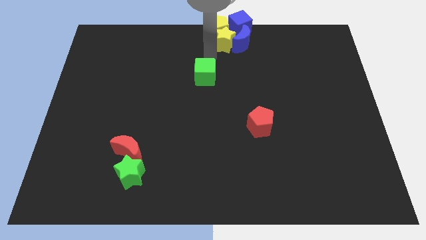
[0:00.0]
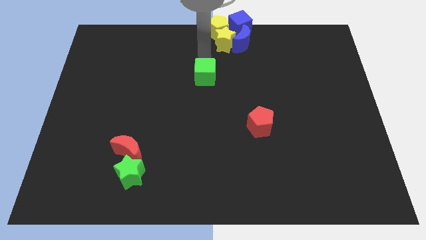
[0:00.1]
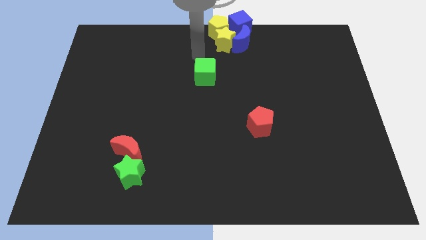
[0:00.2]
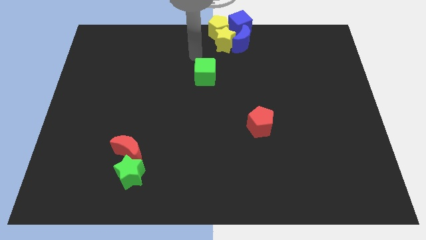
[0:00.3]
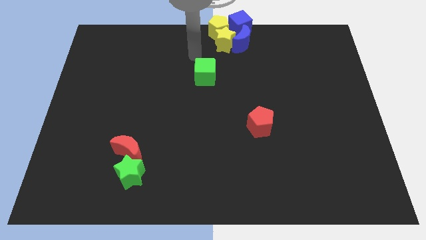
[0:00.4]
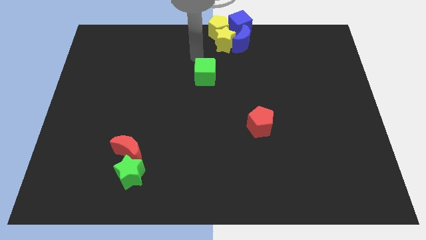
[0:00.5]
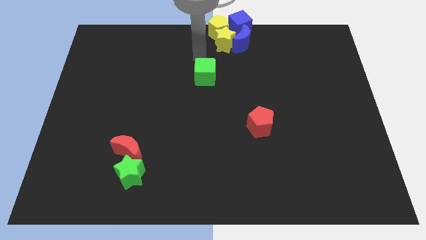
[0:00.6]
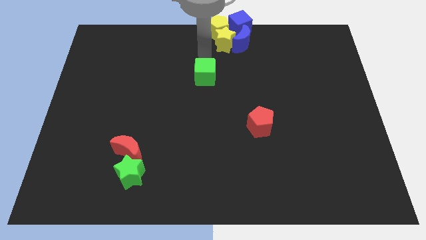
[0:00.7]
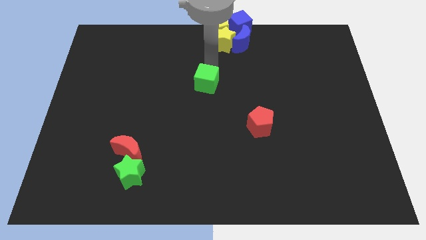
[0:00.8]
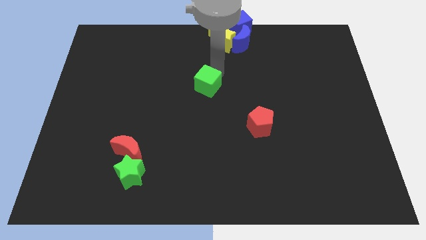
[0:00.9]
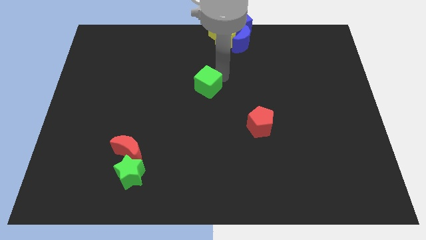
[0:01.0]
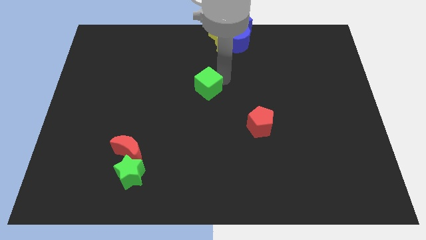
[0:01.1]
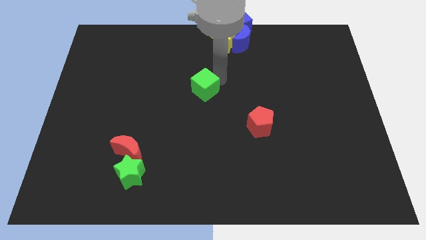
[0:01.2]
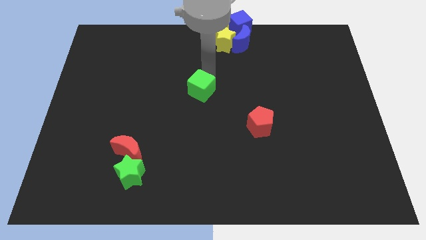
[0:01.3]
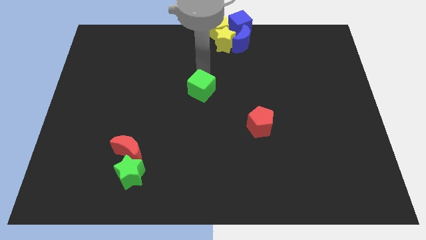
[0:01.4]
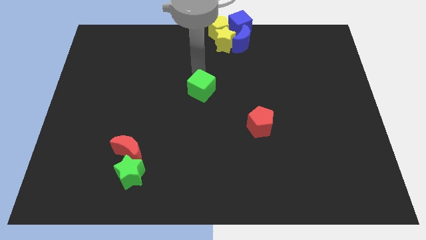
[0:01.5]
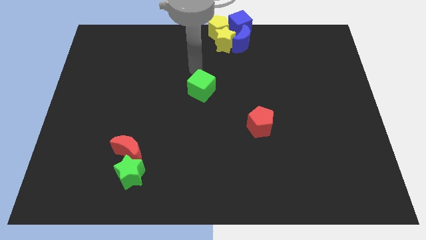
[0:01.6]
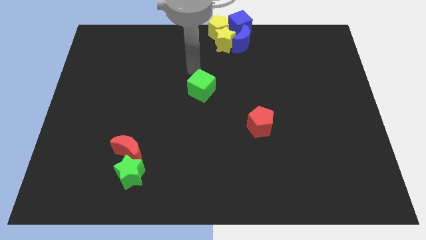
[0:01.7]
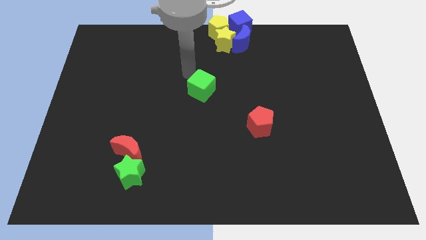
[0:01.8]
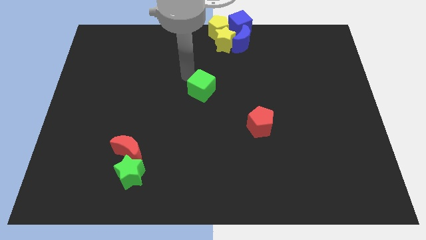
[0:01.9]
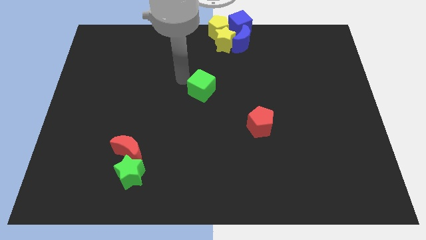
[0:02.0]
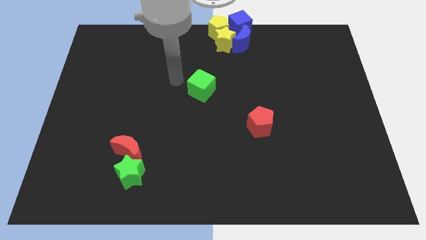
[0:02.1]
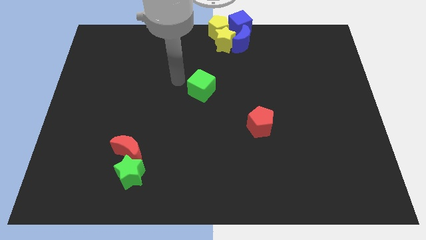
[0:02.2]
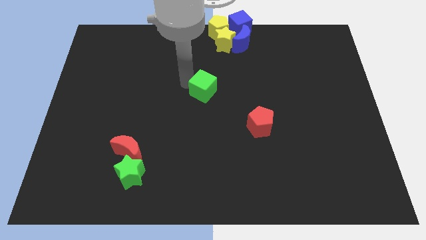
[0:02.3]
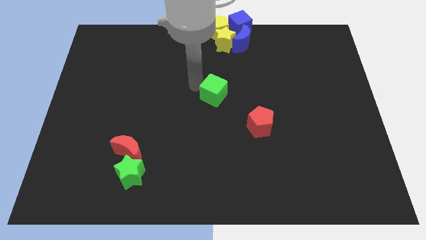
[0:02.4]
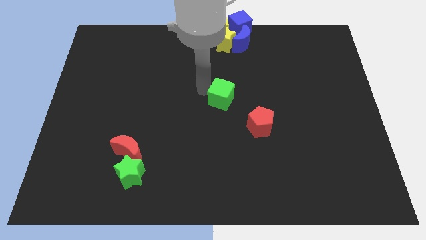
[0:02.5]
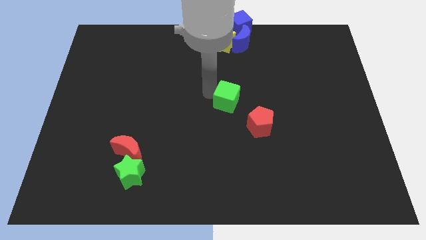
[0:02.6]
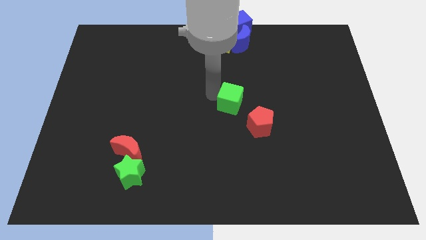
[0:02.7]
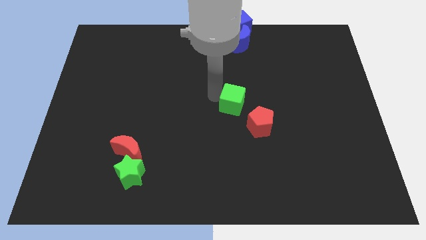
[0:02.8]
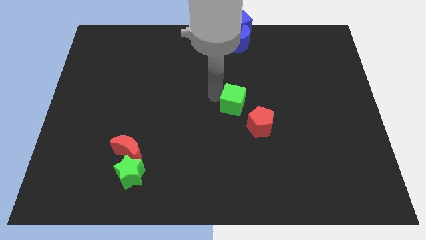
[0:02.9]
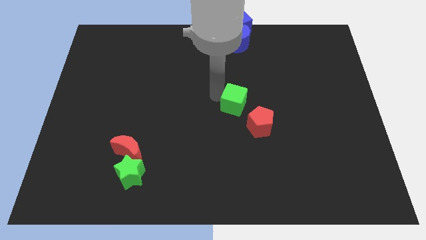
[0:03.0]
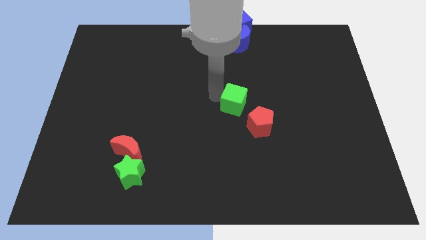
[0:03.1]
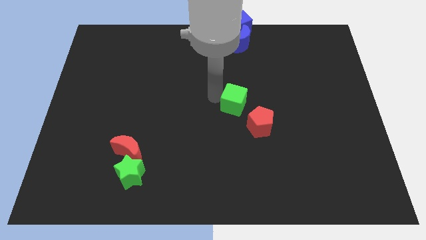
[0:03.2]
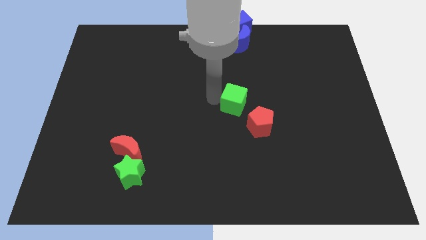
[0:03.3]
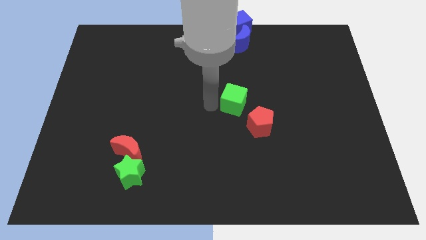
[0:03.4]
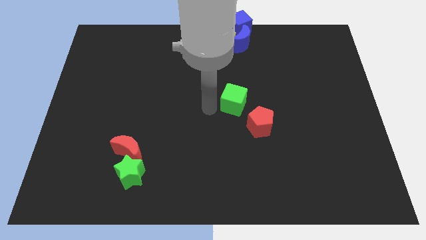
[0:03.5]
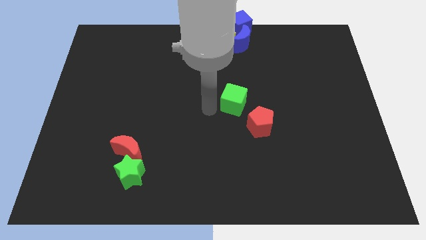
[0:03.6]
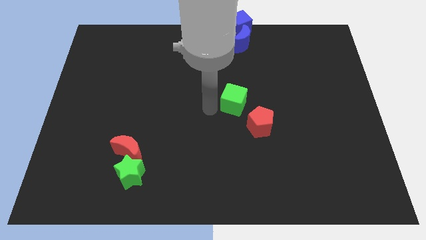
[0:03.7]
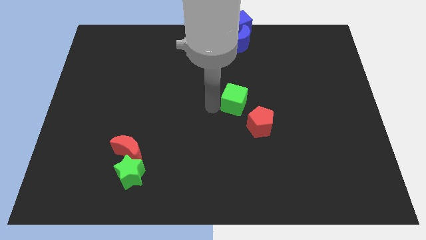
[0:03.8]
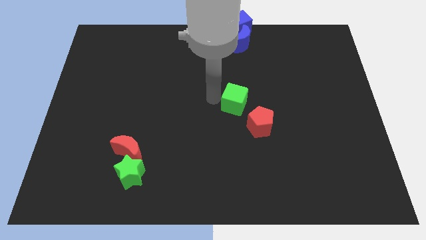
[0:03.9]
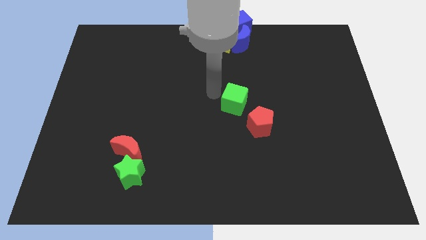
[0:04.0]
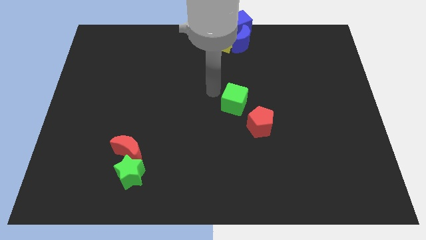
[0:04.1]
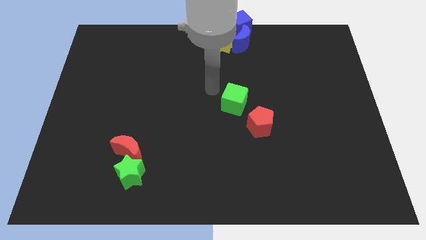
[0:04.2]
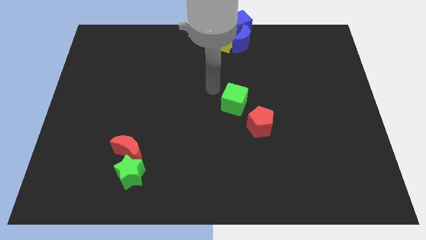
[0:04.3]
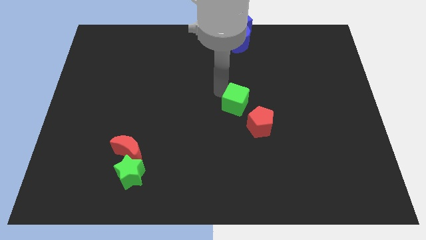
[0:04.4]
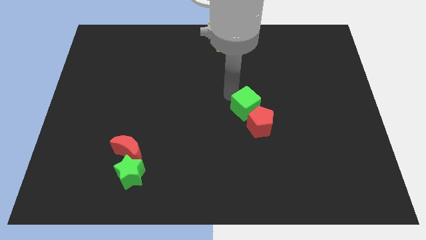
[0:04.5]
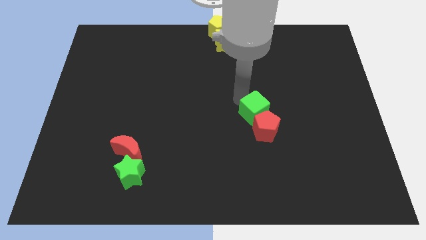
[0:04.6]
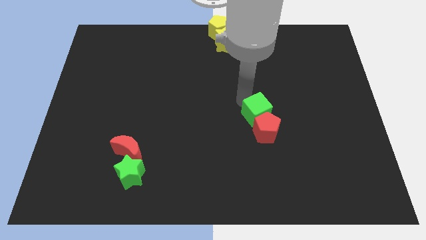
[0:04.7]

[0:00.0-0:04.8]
place the green cube above the red pentagon

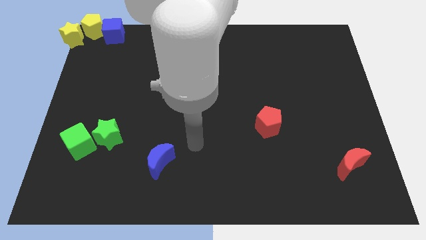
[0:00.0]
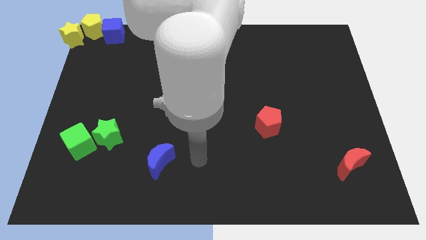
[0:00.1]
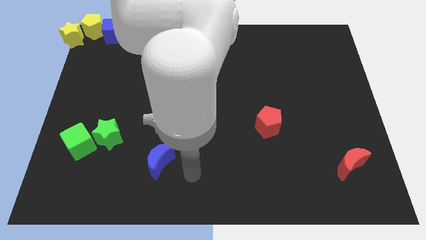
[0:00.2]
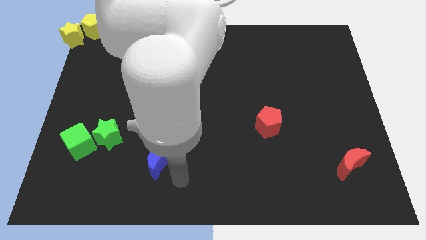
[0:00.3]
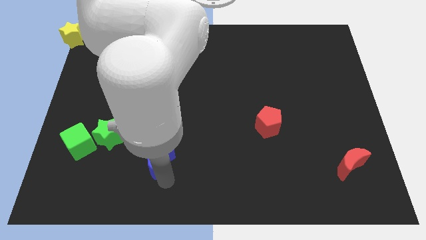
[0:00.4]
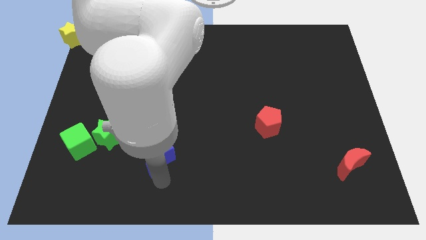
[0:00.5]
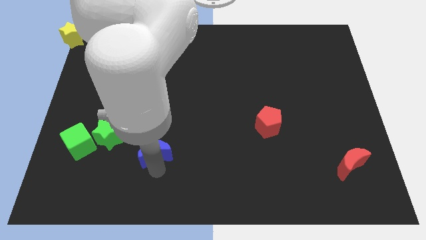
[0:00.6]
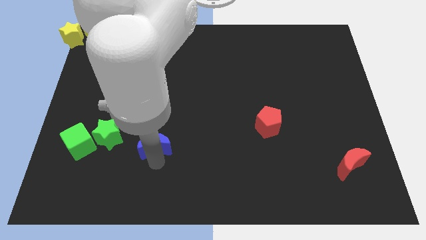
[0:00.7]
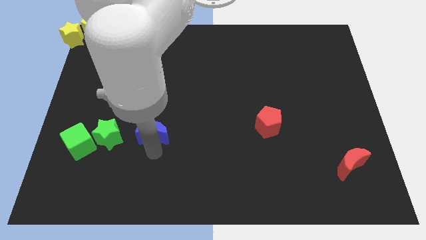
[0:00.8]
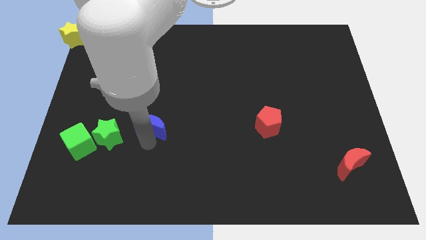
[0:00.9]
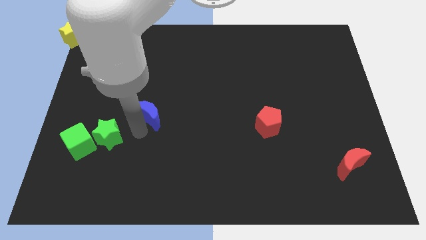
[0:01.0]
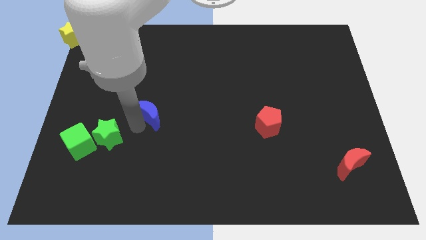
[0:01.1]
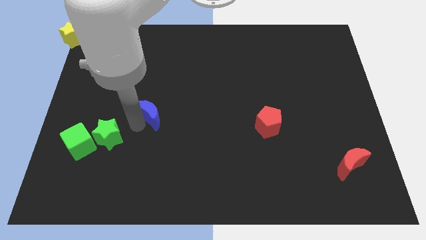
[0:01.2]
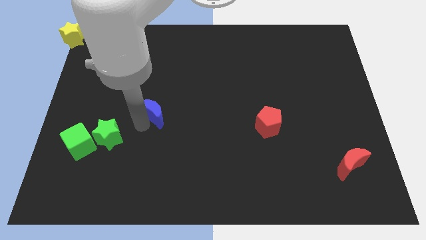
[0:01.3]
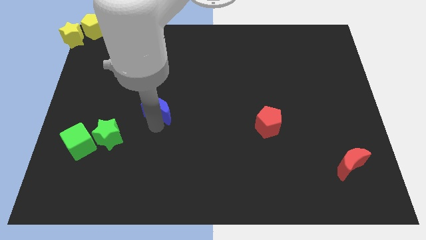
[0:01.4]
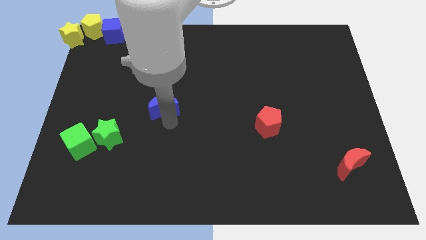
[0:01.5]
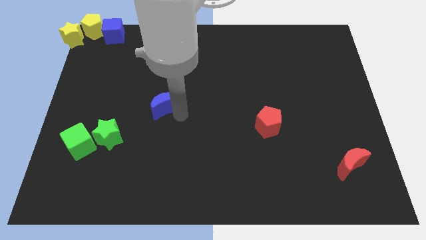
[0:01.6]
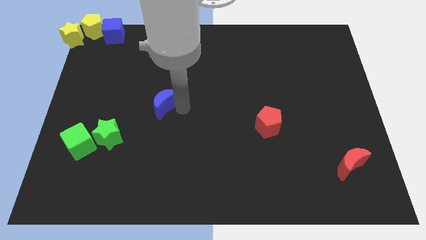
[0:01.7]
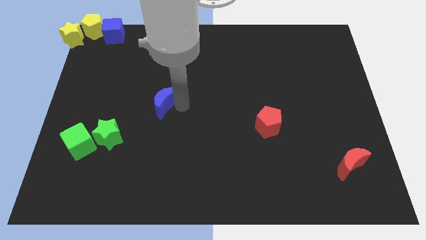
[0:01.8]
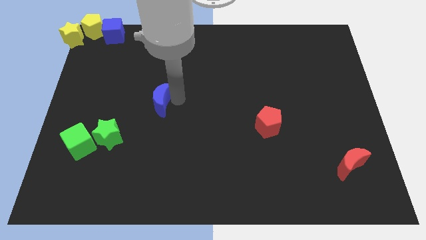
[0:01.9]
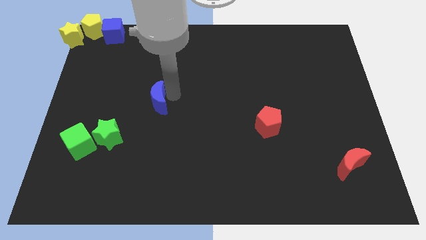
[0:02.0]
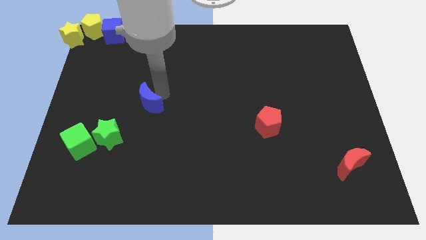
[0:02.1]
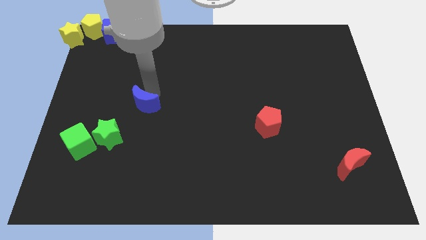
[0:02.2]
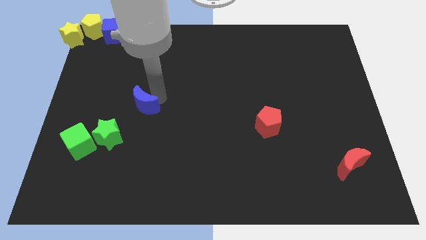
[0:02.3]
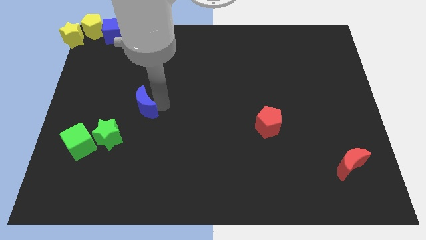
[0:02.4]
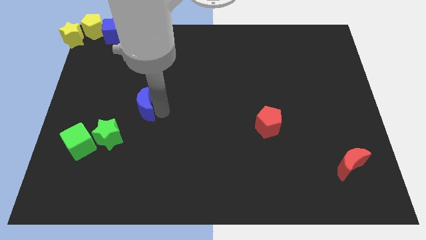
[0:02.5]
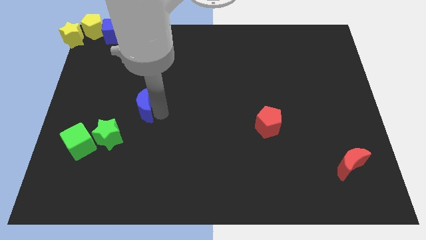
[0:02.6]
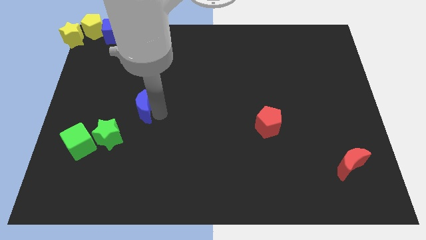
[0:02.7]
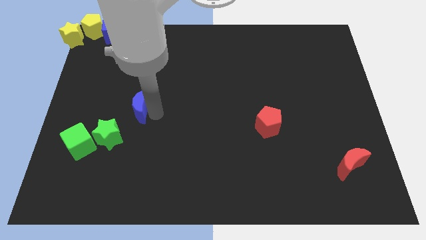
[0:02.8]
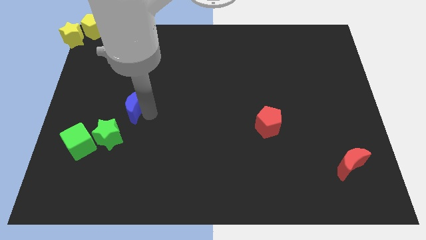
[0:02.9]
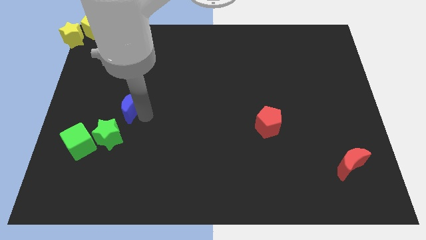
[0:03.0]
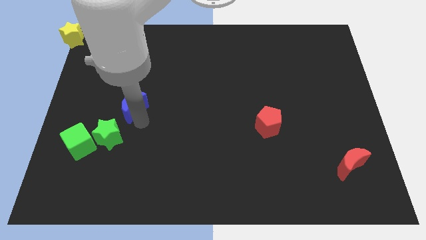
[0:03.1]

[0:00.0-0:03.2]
push the blue crescent top of the green star

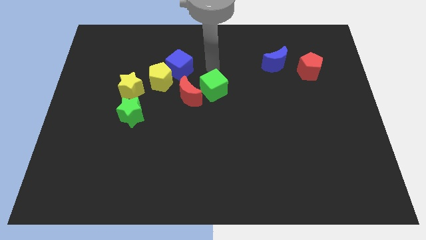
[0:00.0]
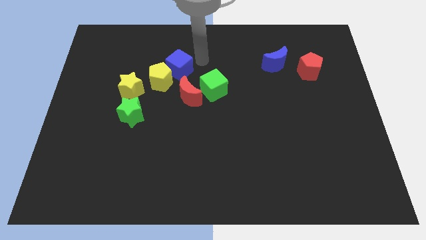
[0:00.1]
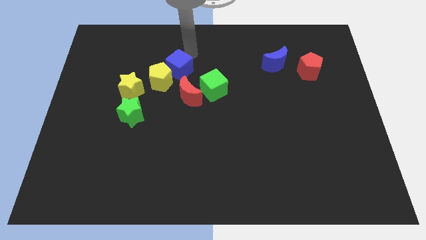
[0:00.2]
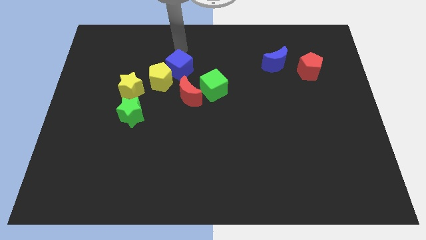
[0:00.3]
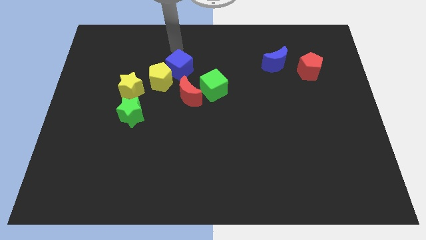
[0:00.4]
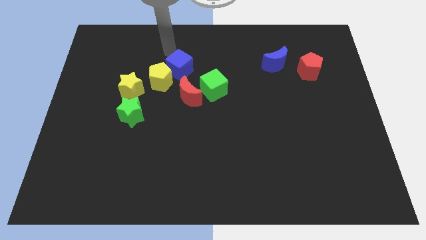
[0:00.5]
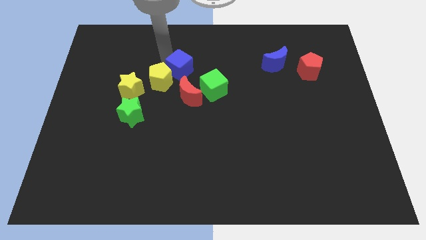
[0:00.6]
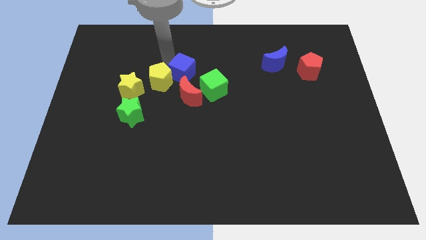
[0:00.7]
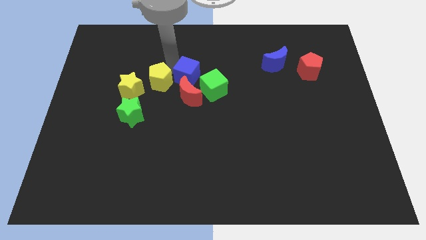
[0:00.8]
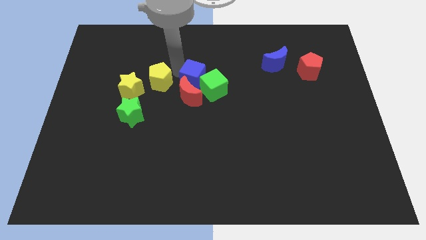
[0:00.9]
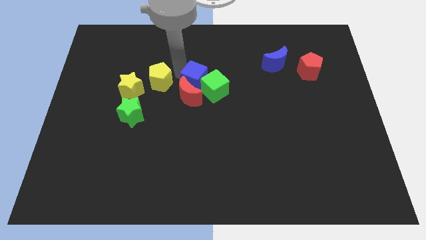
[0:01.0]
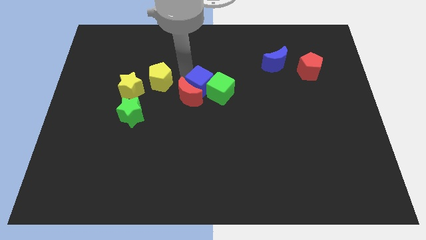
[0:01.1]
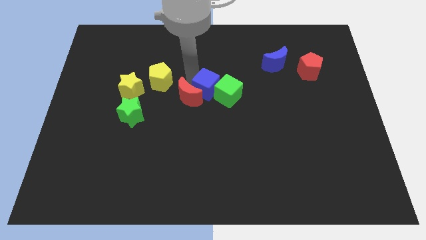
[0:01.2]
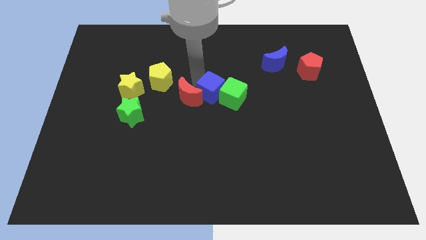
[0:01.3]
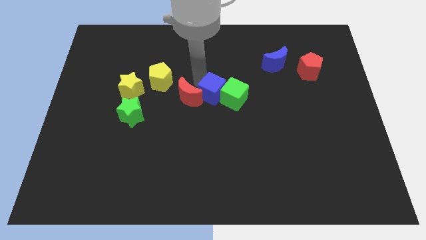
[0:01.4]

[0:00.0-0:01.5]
move the blue cube into the green cube
